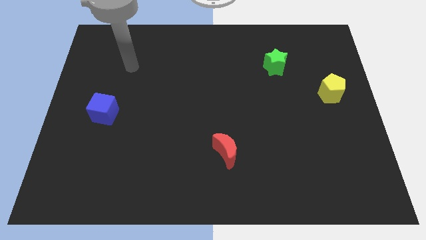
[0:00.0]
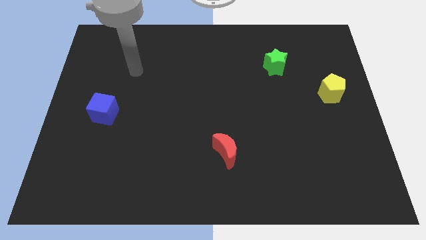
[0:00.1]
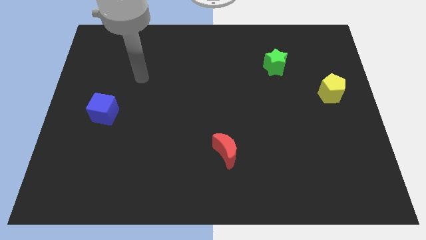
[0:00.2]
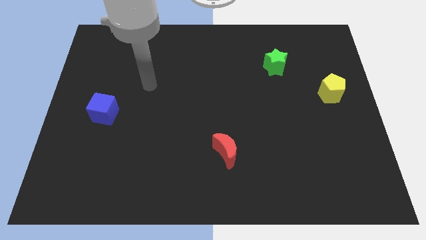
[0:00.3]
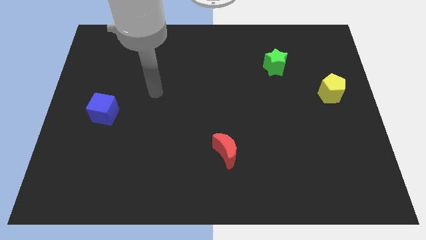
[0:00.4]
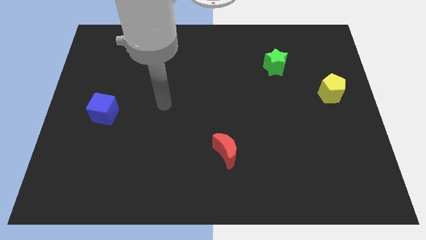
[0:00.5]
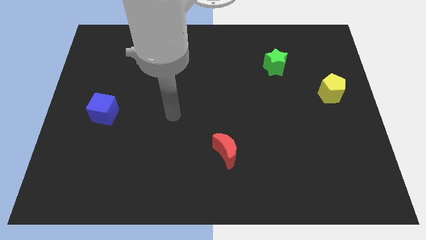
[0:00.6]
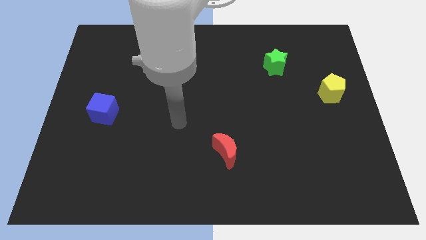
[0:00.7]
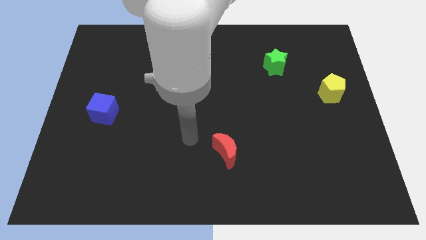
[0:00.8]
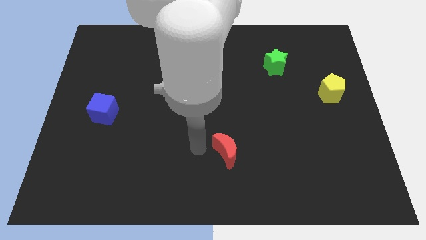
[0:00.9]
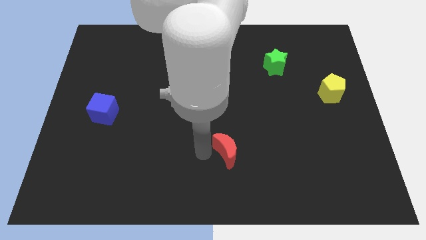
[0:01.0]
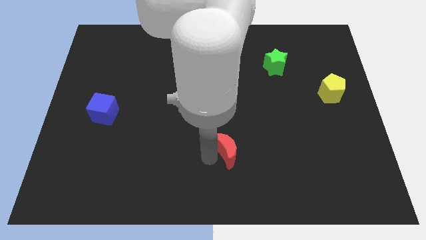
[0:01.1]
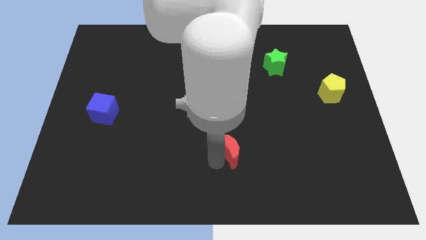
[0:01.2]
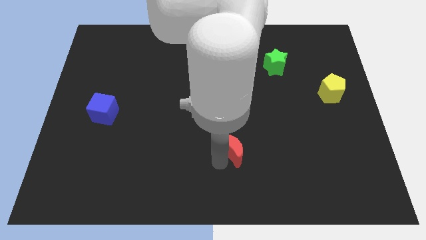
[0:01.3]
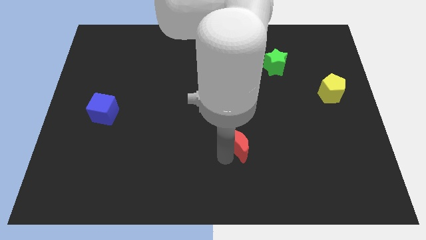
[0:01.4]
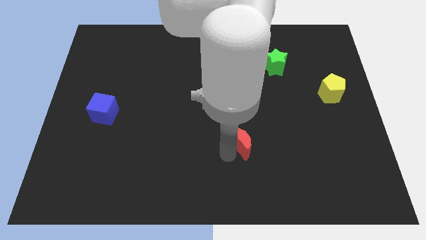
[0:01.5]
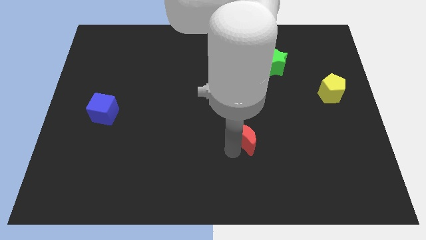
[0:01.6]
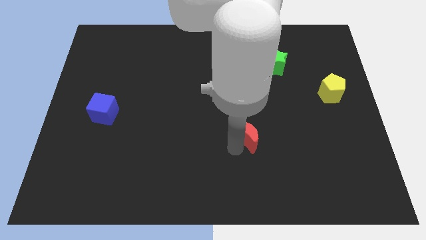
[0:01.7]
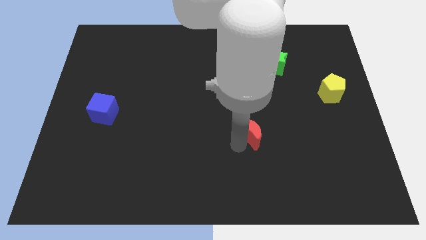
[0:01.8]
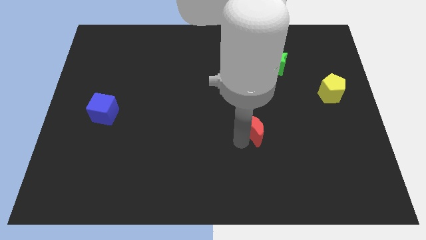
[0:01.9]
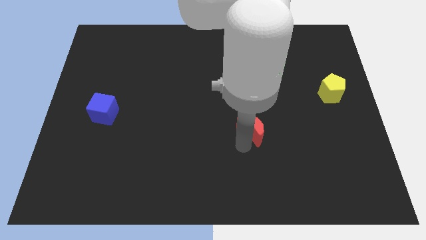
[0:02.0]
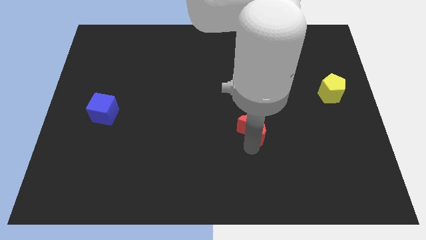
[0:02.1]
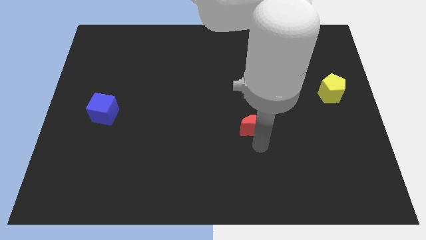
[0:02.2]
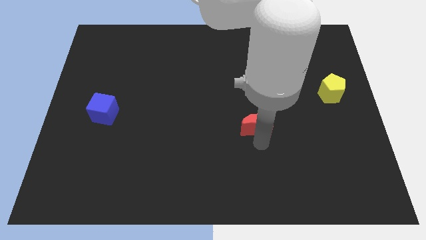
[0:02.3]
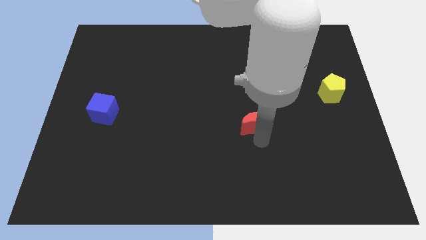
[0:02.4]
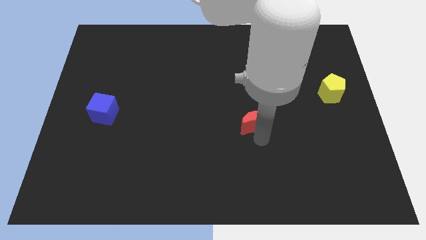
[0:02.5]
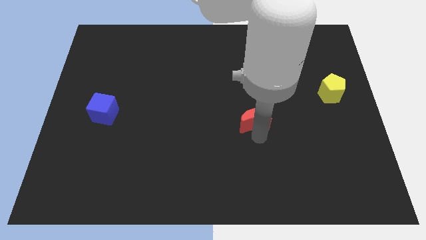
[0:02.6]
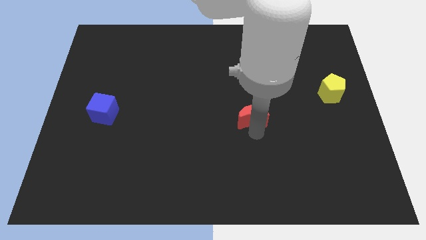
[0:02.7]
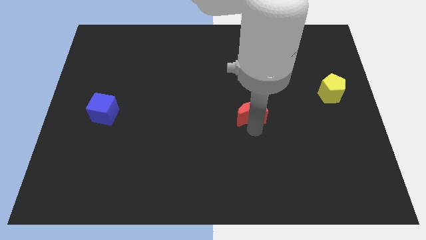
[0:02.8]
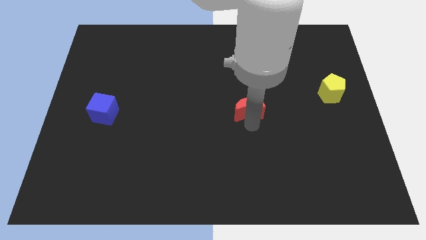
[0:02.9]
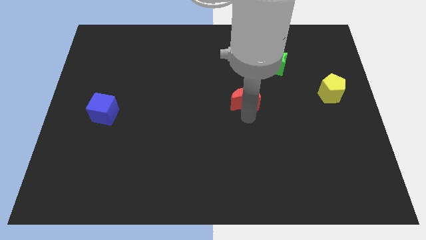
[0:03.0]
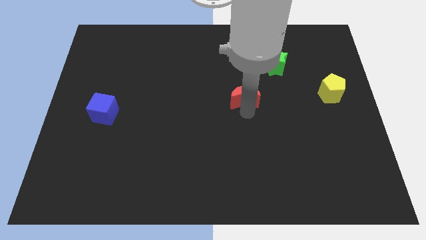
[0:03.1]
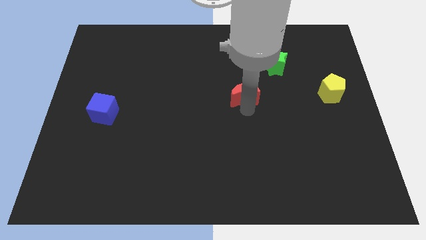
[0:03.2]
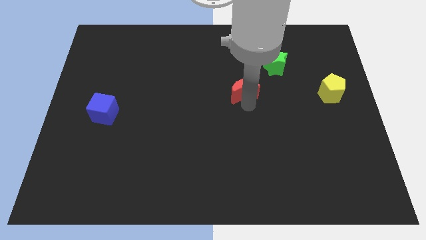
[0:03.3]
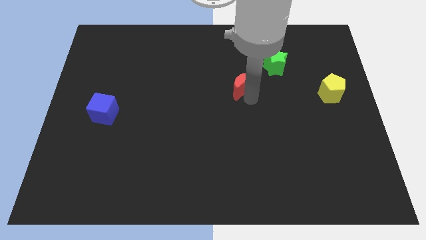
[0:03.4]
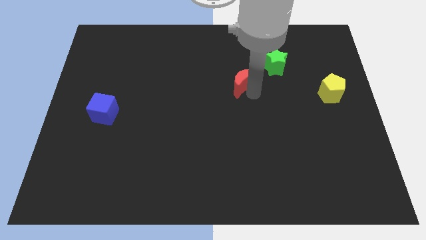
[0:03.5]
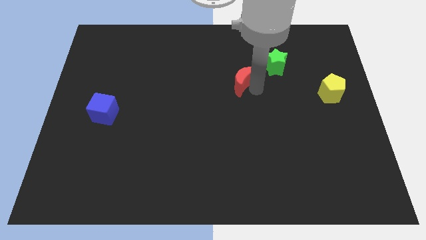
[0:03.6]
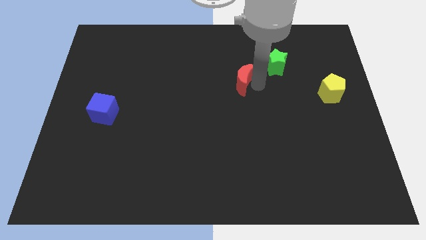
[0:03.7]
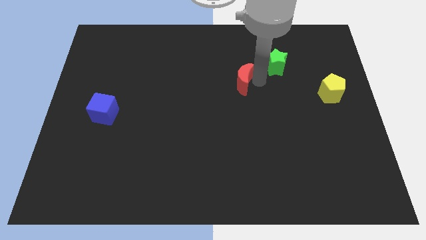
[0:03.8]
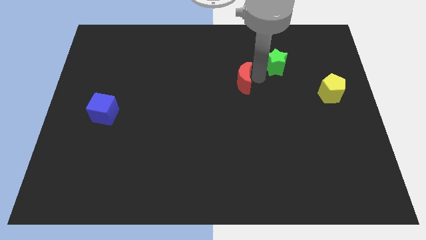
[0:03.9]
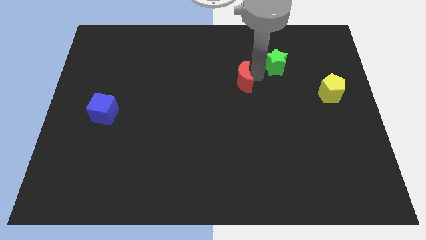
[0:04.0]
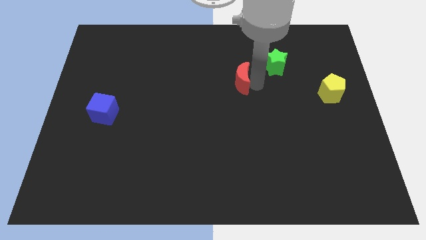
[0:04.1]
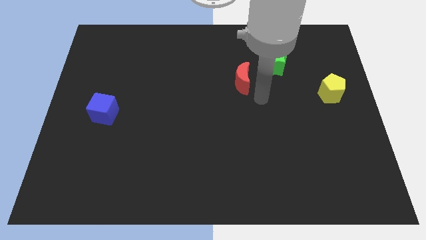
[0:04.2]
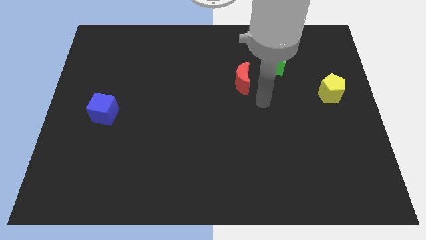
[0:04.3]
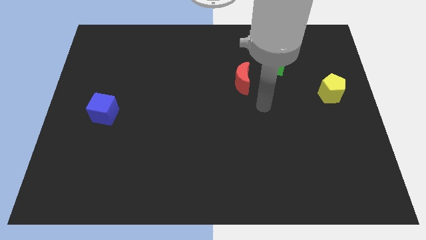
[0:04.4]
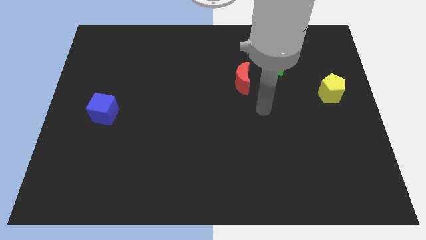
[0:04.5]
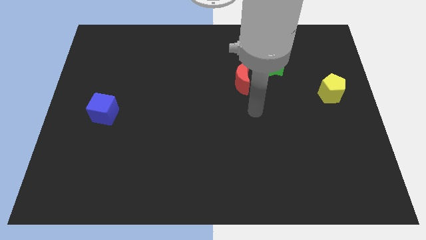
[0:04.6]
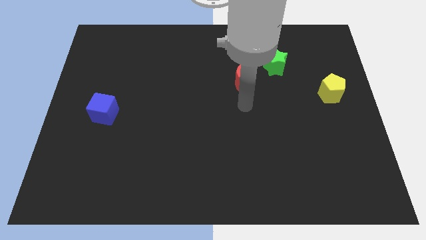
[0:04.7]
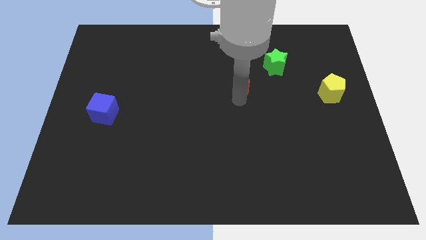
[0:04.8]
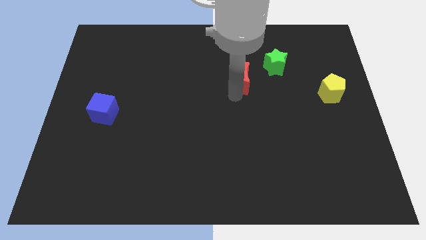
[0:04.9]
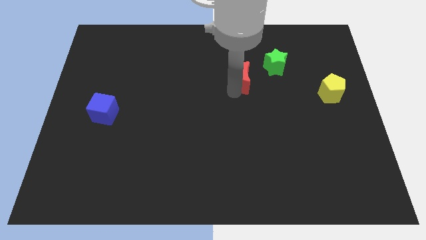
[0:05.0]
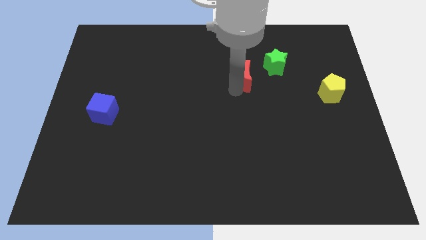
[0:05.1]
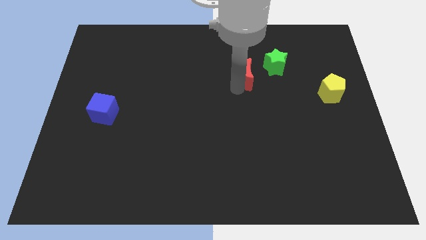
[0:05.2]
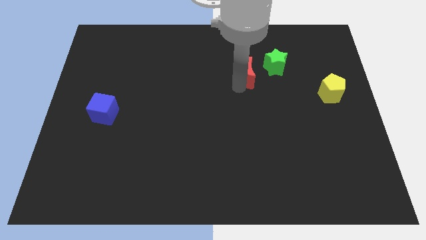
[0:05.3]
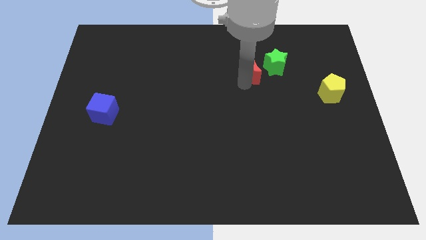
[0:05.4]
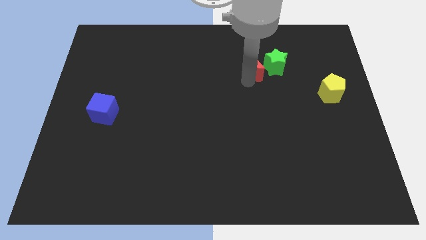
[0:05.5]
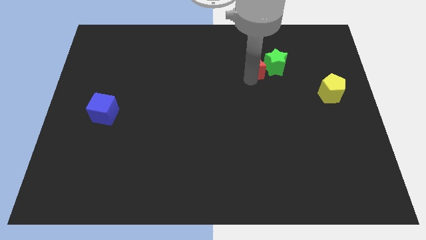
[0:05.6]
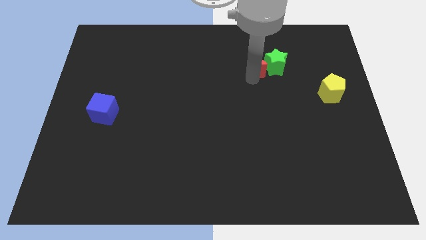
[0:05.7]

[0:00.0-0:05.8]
slide the red block to the star

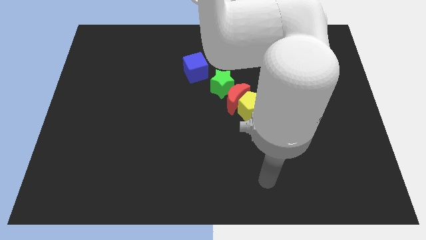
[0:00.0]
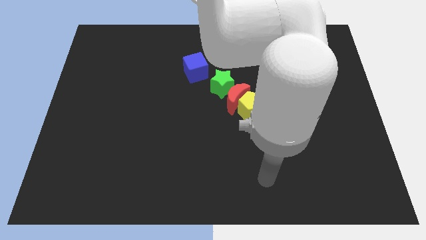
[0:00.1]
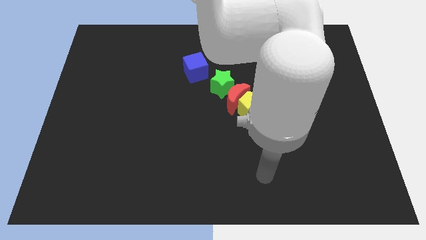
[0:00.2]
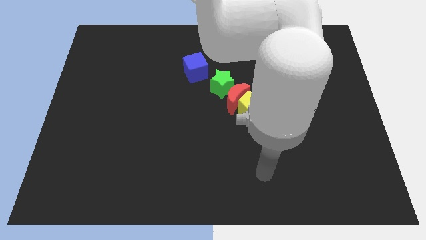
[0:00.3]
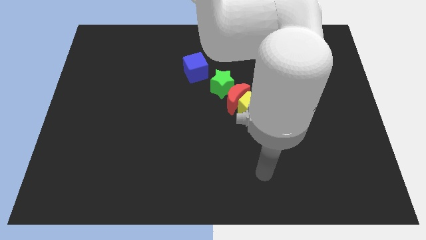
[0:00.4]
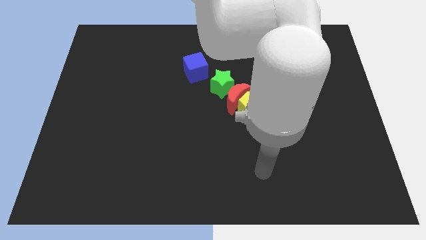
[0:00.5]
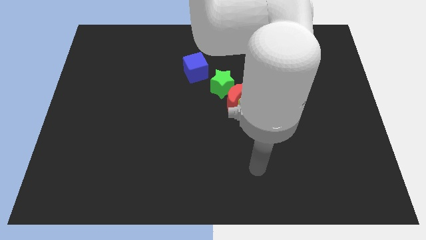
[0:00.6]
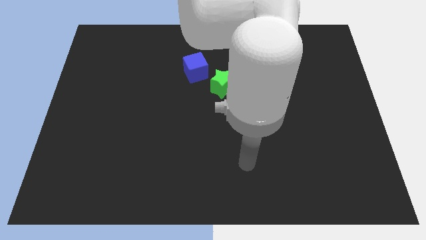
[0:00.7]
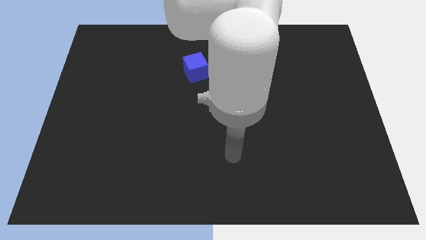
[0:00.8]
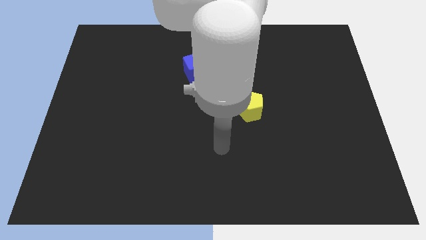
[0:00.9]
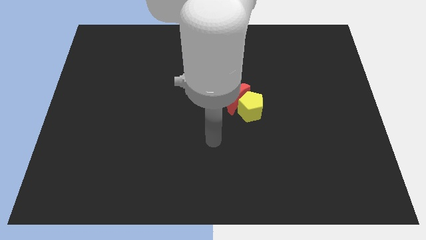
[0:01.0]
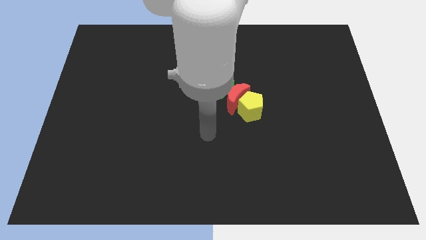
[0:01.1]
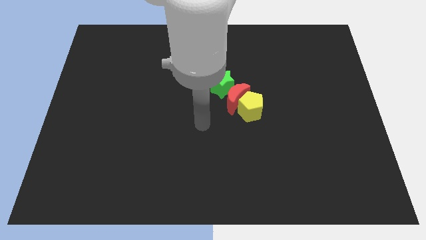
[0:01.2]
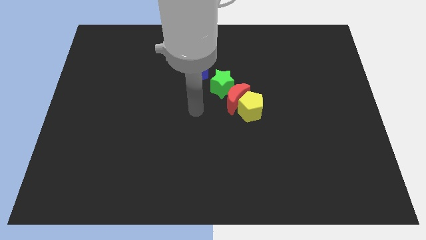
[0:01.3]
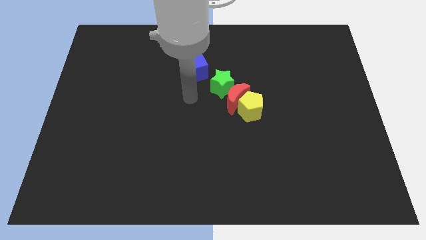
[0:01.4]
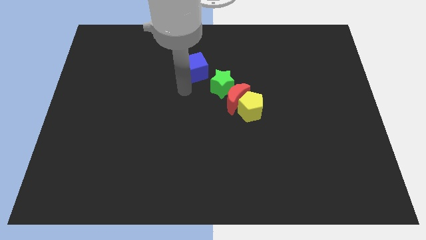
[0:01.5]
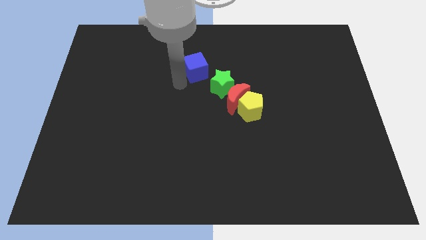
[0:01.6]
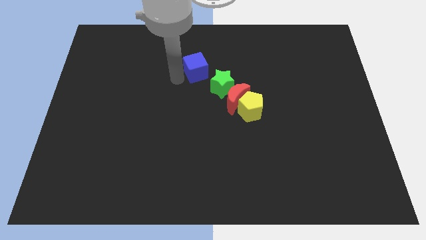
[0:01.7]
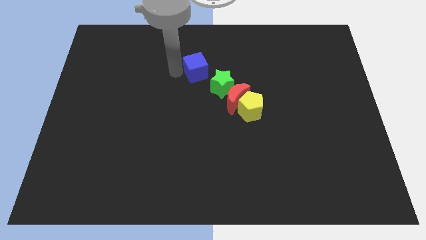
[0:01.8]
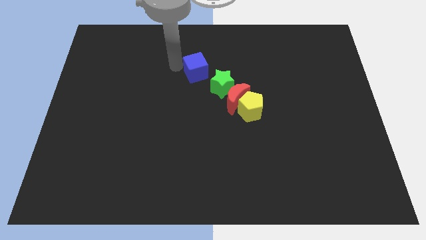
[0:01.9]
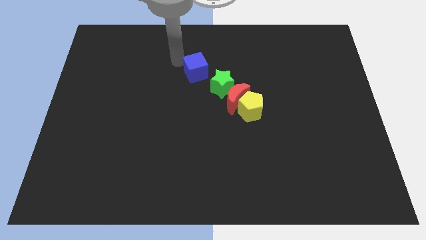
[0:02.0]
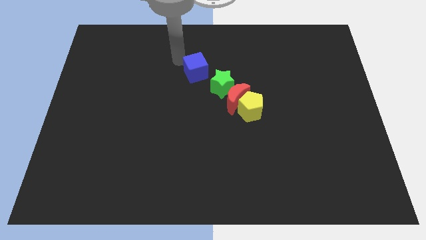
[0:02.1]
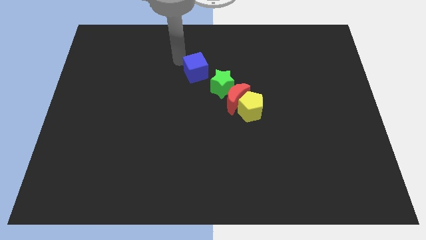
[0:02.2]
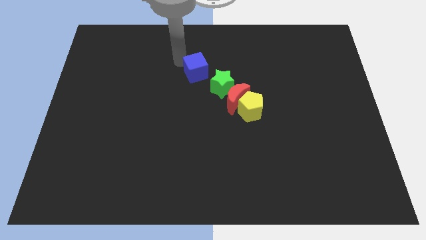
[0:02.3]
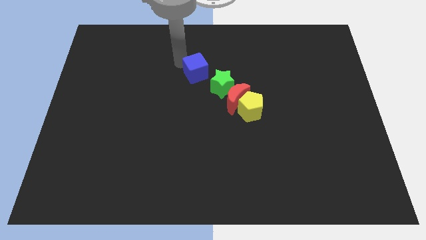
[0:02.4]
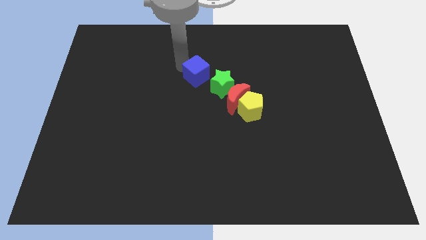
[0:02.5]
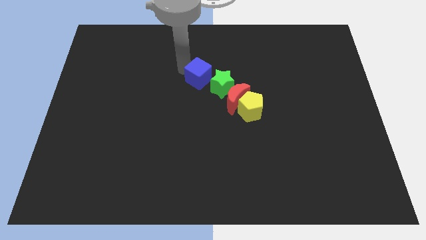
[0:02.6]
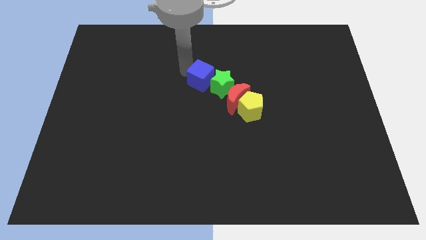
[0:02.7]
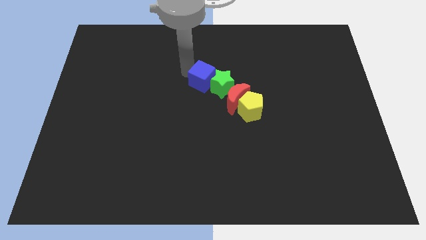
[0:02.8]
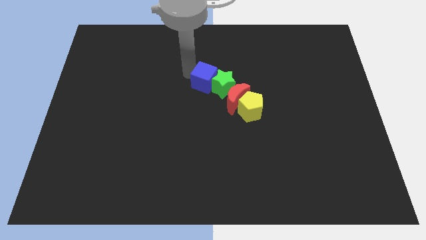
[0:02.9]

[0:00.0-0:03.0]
move the blue cube to the star
